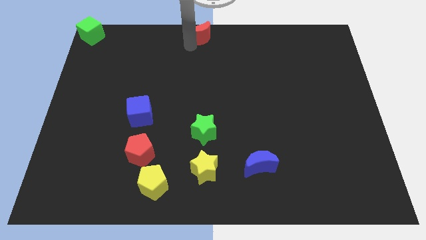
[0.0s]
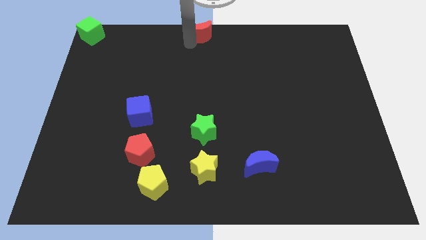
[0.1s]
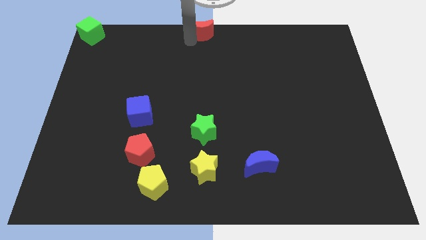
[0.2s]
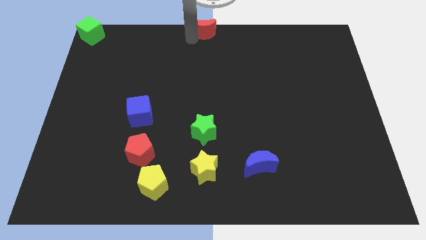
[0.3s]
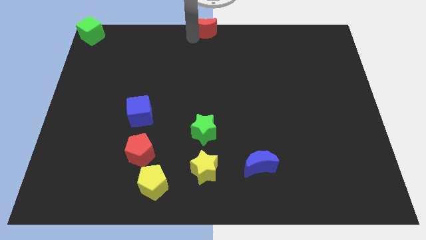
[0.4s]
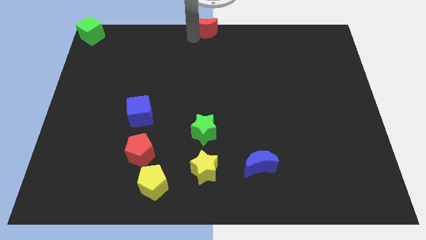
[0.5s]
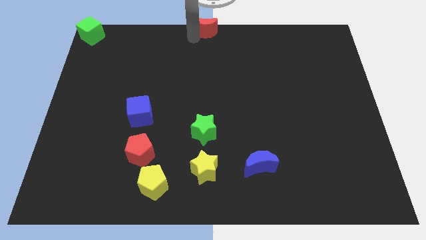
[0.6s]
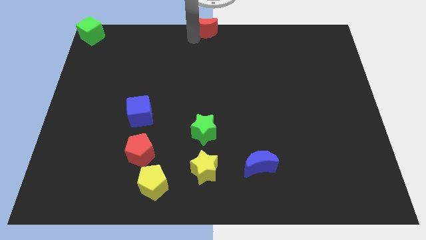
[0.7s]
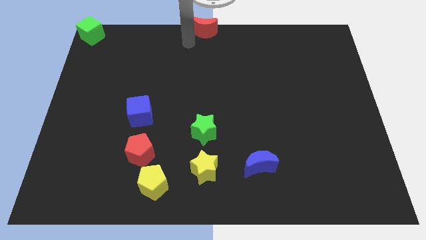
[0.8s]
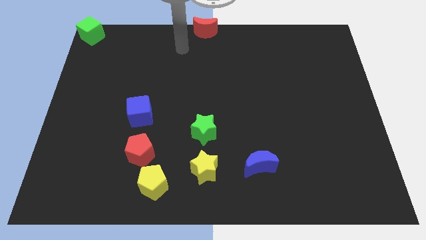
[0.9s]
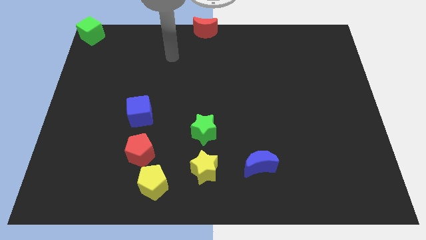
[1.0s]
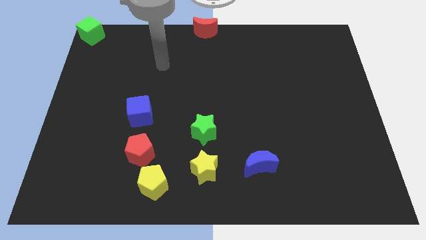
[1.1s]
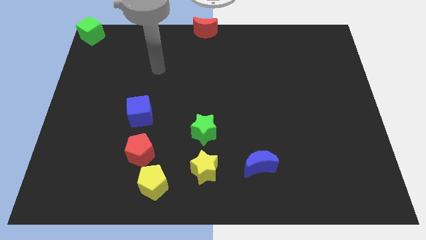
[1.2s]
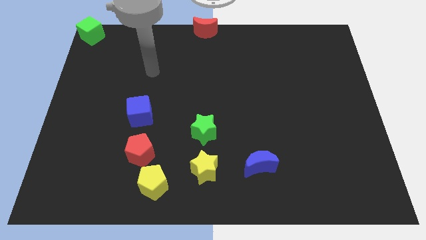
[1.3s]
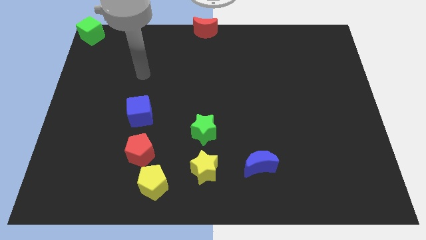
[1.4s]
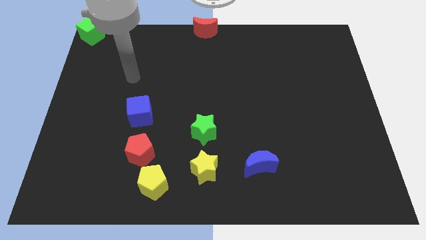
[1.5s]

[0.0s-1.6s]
place the red moon above the green star

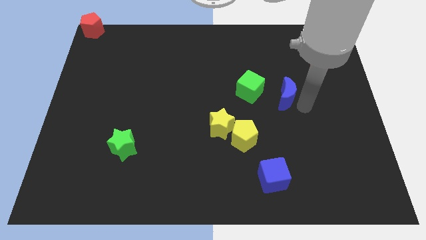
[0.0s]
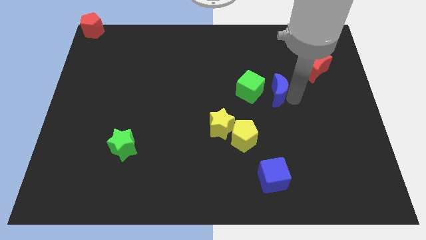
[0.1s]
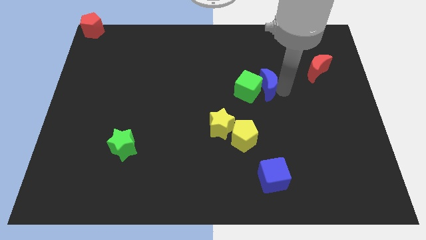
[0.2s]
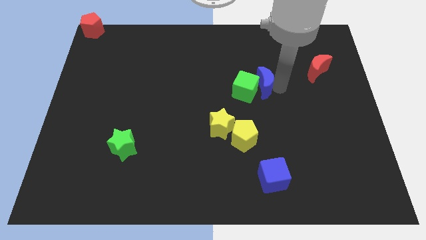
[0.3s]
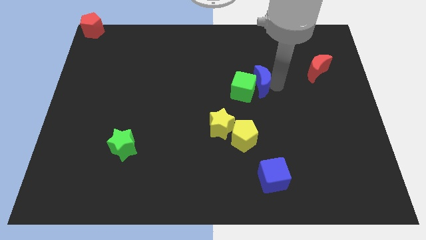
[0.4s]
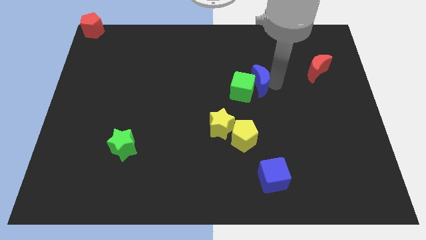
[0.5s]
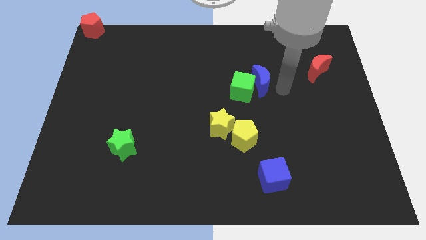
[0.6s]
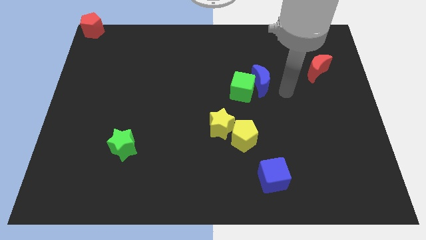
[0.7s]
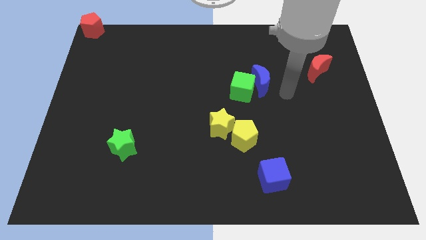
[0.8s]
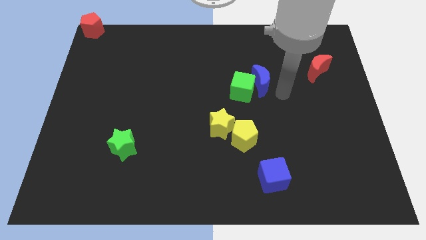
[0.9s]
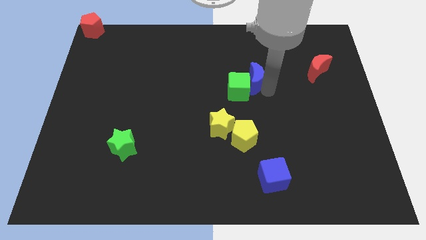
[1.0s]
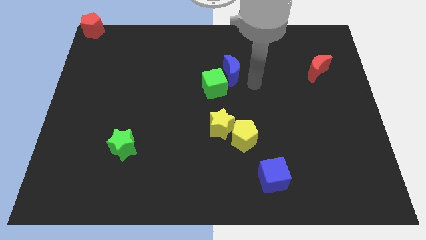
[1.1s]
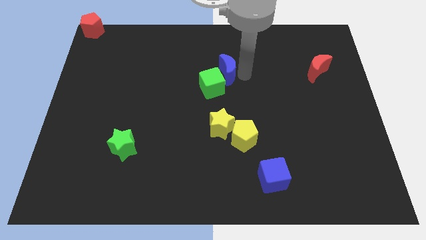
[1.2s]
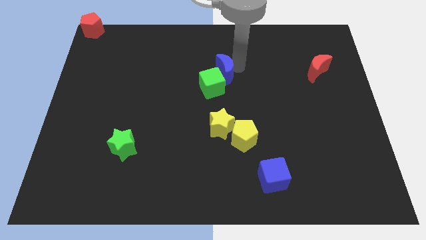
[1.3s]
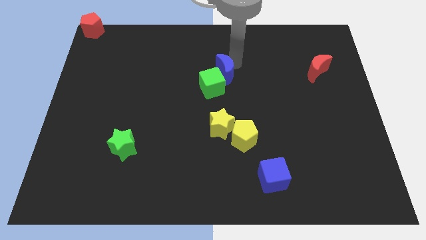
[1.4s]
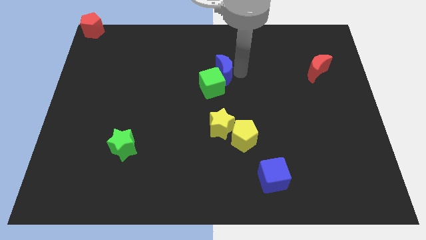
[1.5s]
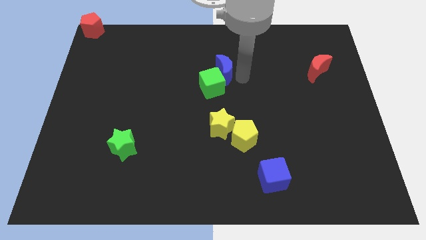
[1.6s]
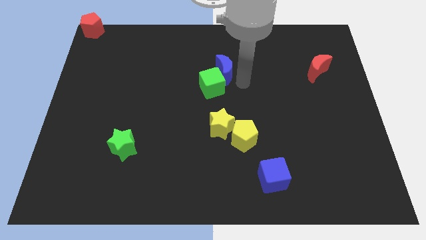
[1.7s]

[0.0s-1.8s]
push the blue crescent into the green cube

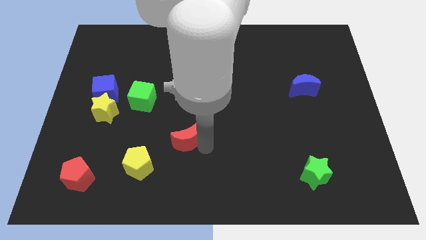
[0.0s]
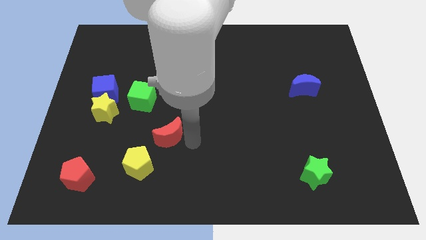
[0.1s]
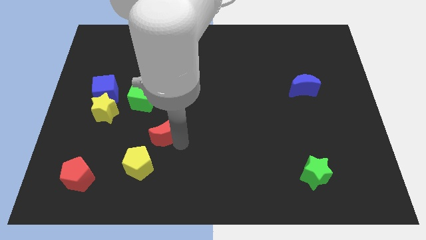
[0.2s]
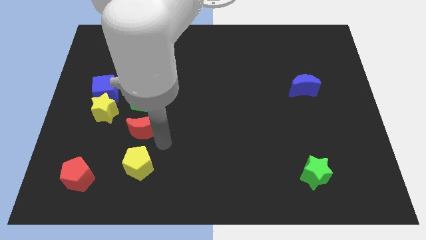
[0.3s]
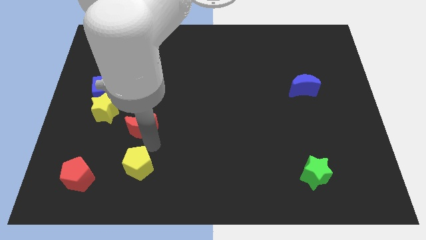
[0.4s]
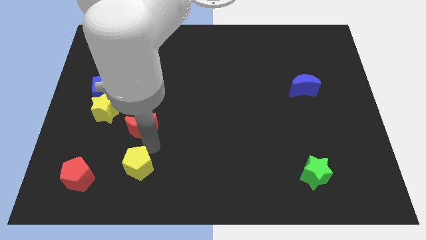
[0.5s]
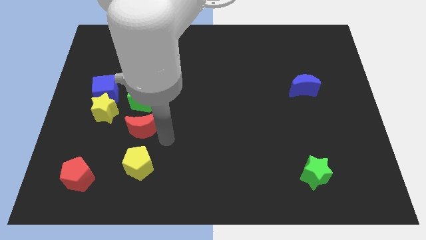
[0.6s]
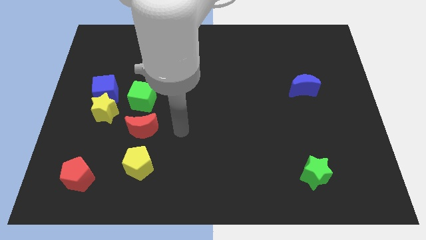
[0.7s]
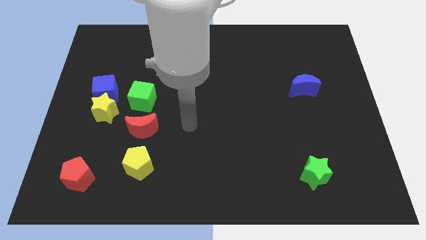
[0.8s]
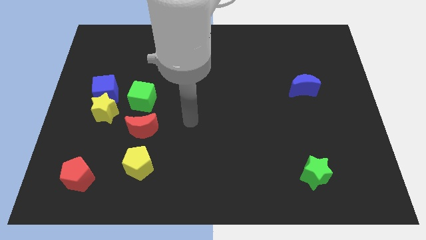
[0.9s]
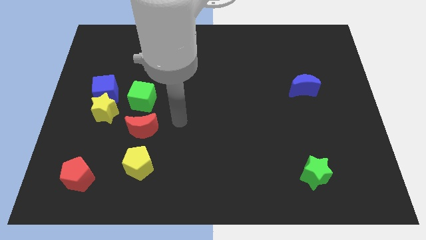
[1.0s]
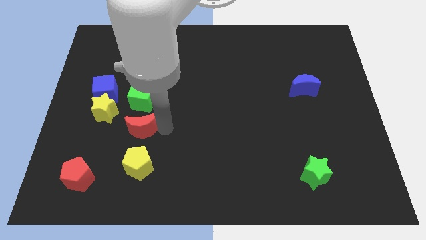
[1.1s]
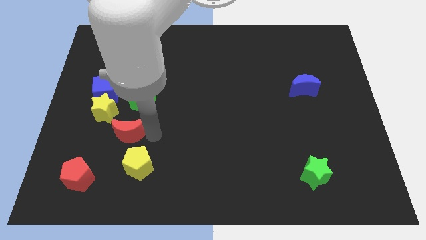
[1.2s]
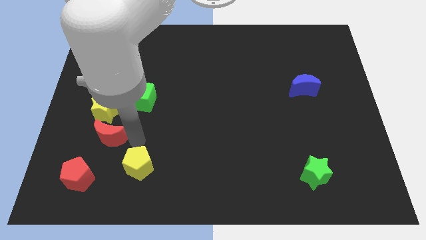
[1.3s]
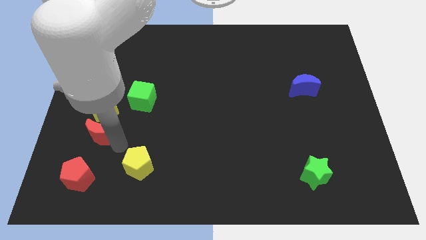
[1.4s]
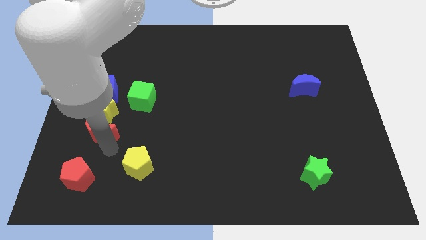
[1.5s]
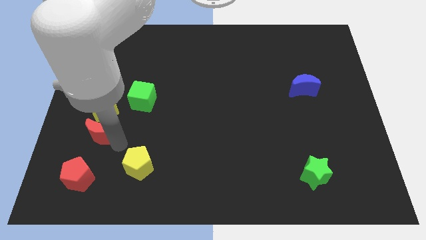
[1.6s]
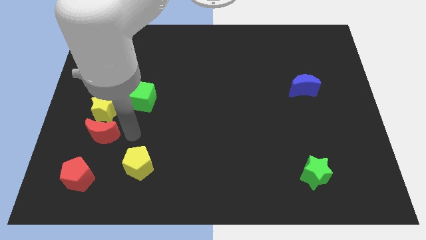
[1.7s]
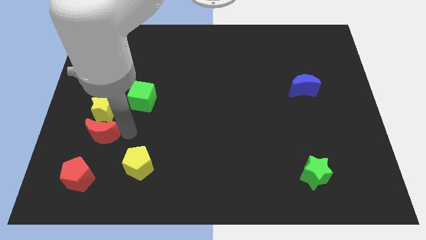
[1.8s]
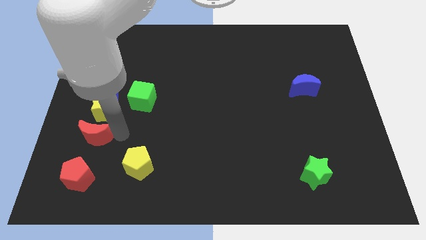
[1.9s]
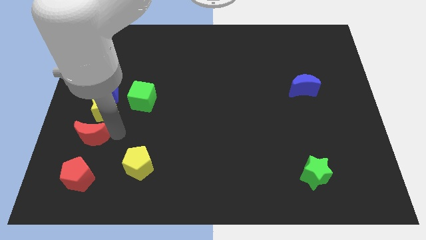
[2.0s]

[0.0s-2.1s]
move the red crescent to the bottom of the yellow star

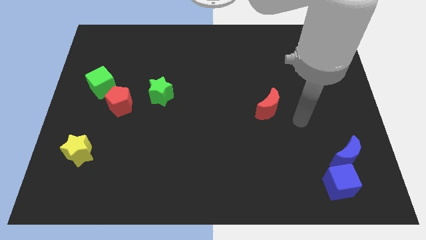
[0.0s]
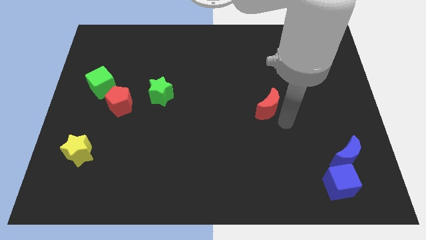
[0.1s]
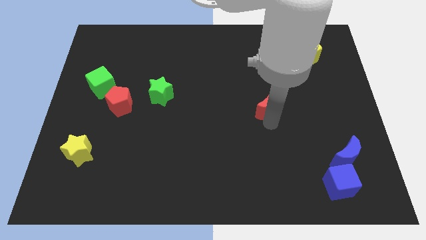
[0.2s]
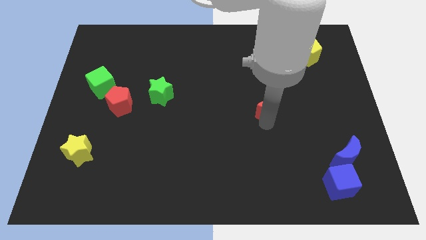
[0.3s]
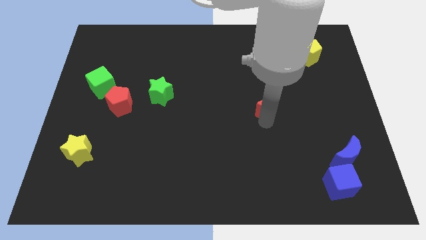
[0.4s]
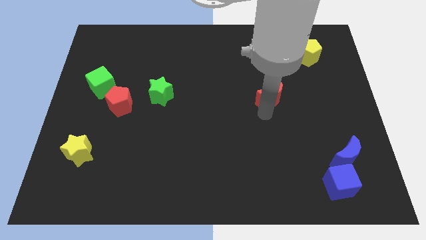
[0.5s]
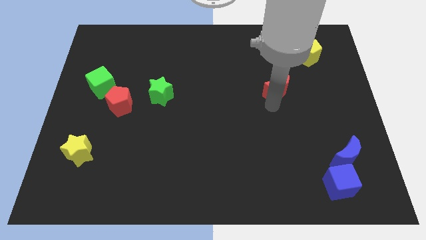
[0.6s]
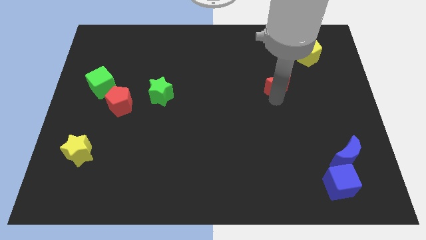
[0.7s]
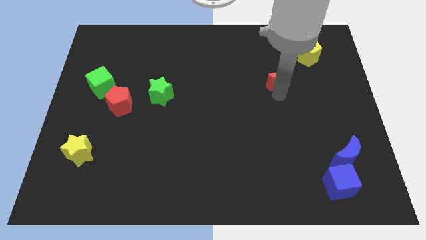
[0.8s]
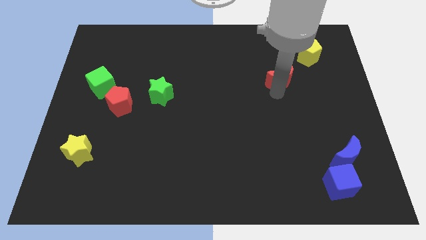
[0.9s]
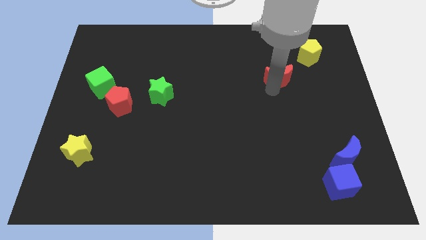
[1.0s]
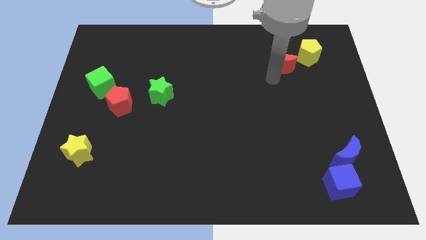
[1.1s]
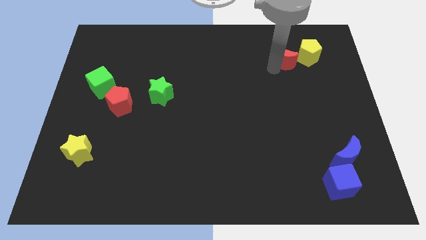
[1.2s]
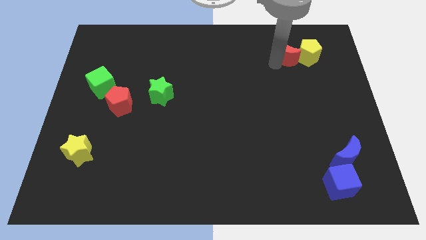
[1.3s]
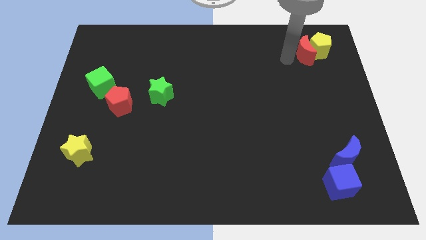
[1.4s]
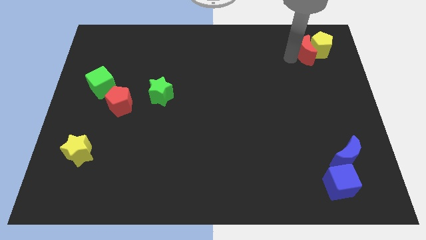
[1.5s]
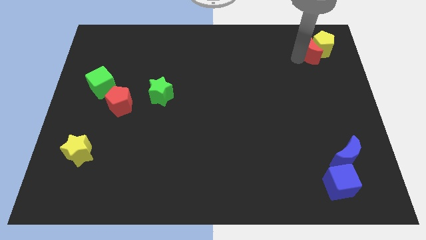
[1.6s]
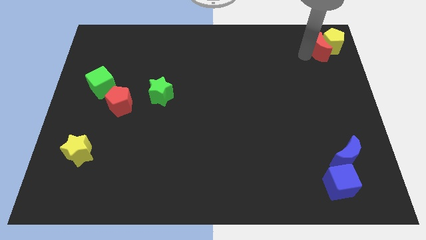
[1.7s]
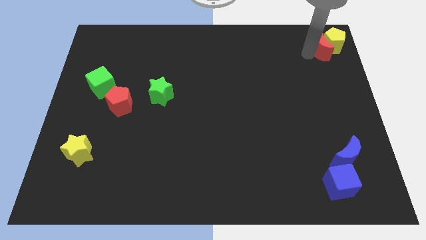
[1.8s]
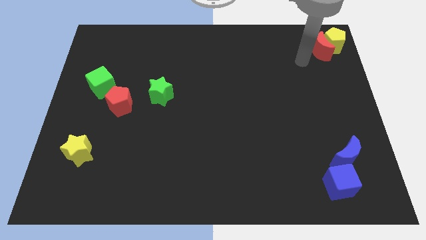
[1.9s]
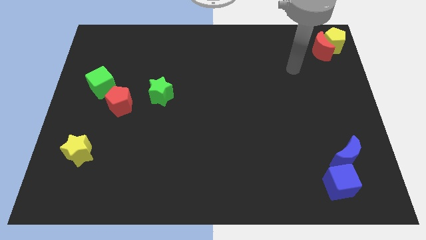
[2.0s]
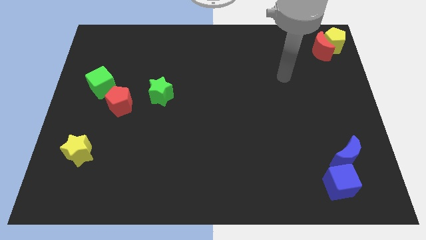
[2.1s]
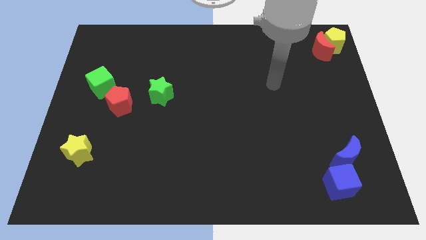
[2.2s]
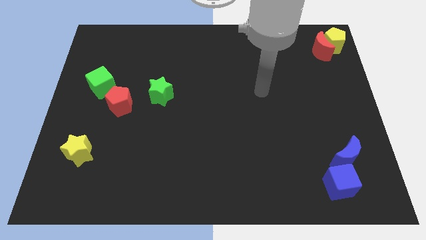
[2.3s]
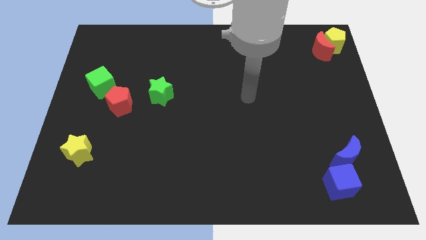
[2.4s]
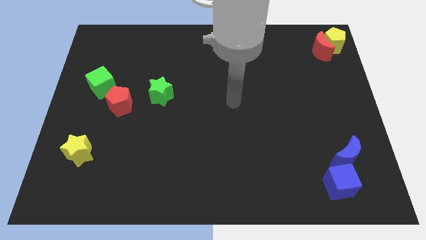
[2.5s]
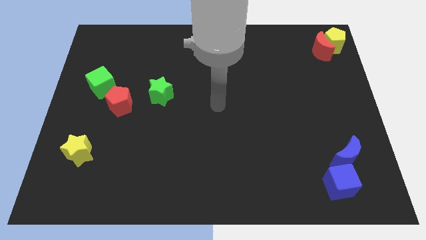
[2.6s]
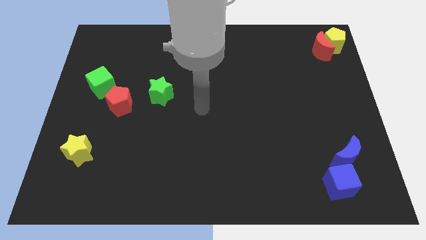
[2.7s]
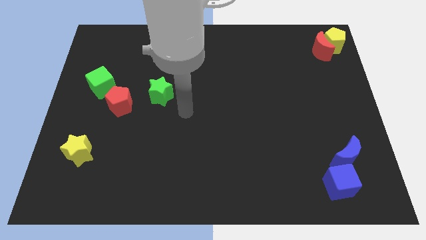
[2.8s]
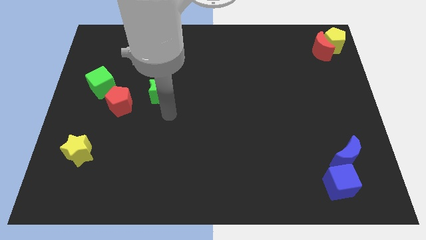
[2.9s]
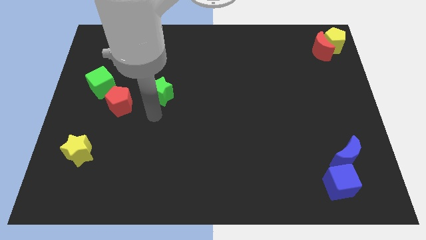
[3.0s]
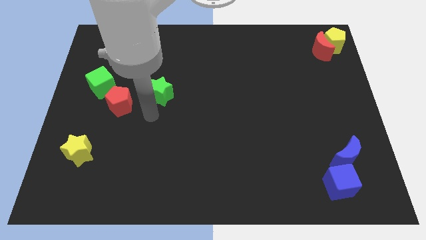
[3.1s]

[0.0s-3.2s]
place the red crescent and yellow pentagon to the top right side of the board
